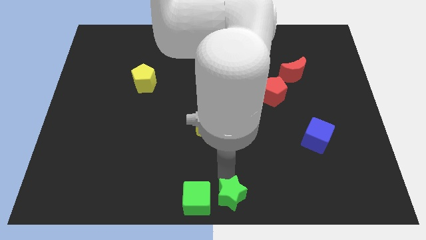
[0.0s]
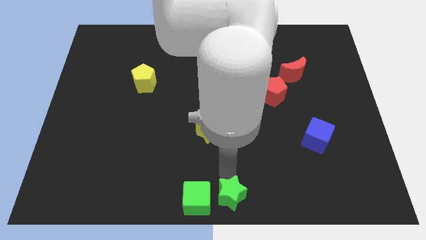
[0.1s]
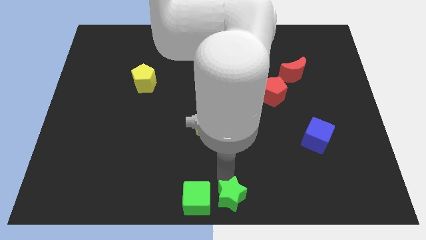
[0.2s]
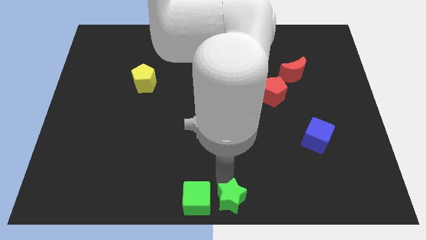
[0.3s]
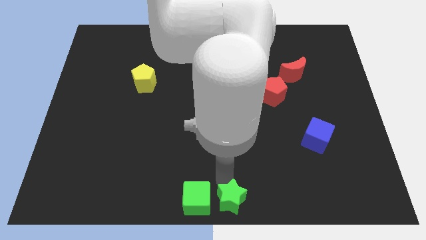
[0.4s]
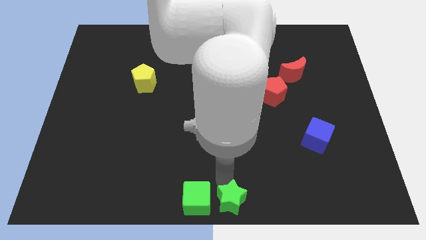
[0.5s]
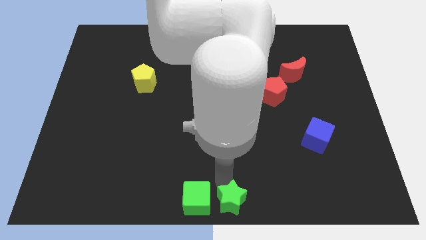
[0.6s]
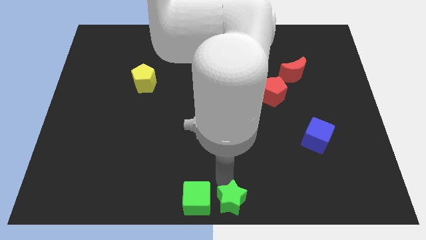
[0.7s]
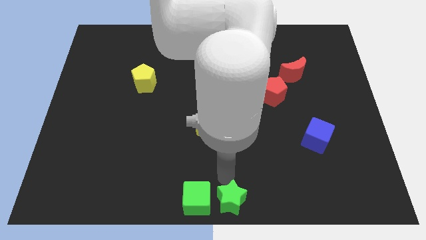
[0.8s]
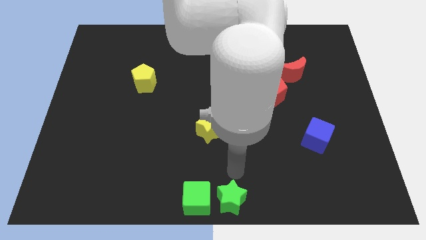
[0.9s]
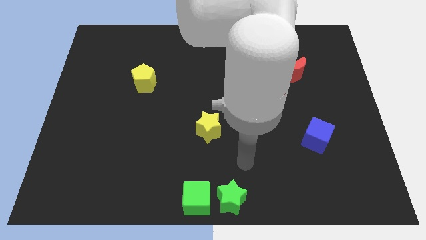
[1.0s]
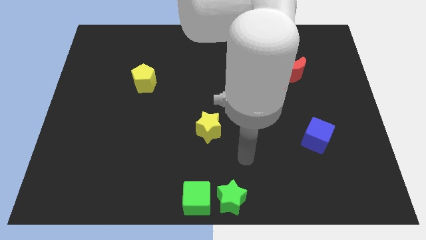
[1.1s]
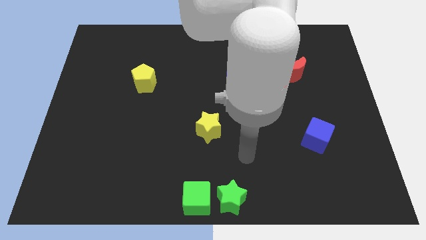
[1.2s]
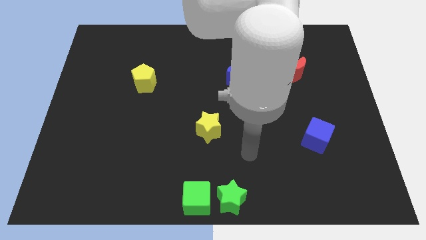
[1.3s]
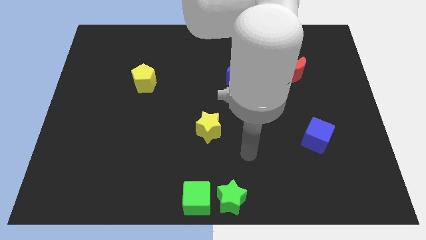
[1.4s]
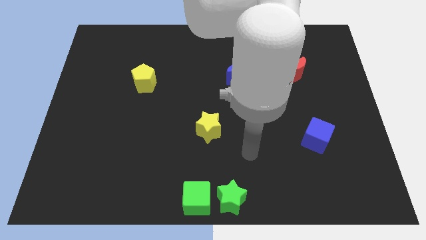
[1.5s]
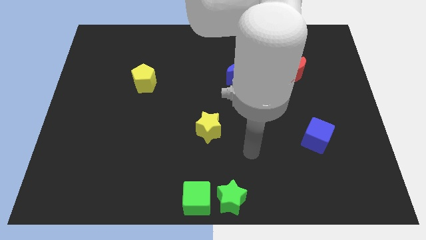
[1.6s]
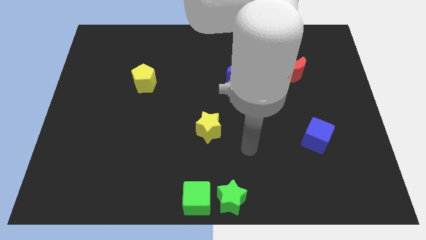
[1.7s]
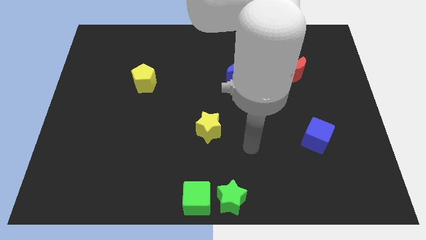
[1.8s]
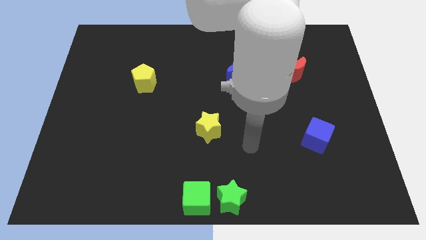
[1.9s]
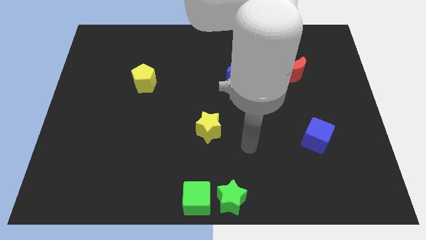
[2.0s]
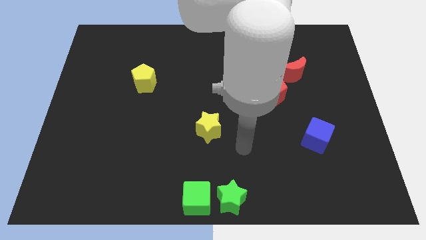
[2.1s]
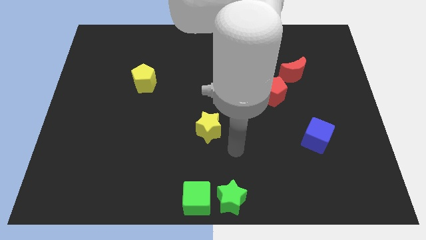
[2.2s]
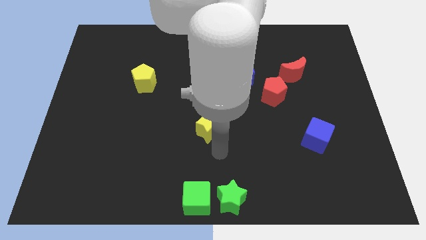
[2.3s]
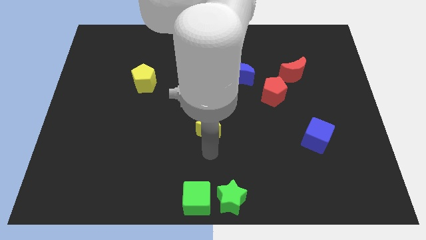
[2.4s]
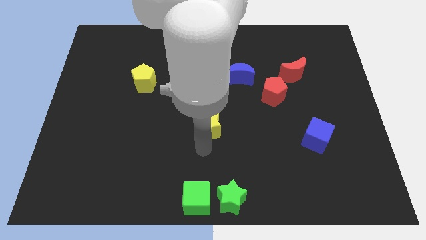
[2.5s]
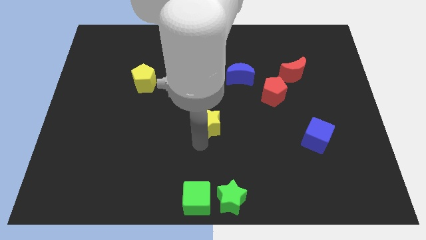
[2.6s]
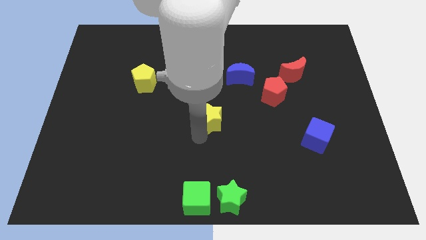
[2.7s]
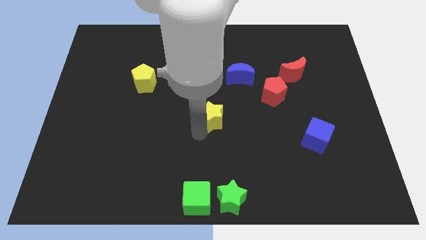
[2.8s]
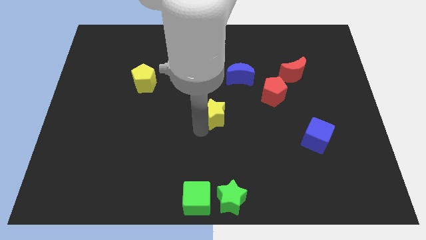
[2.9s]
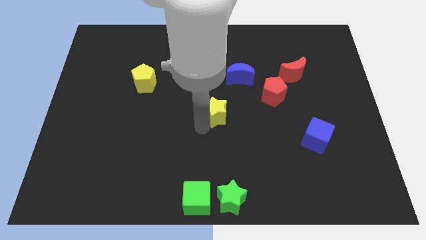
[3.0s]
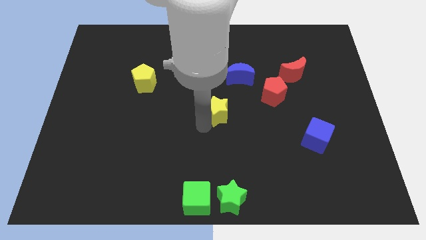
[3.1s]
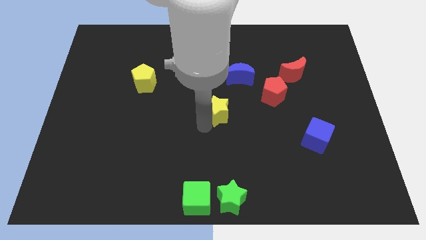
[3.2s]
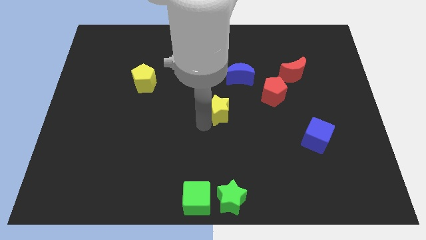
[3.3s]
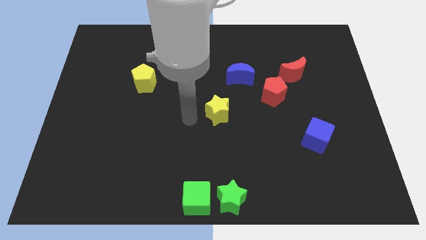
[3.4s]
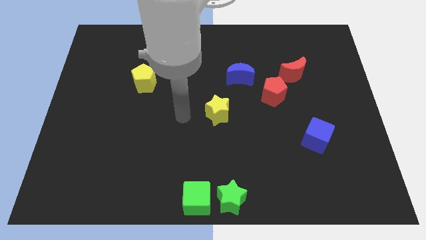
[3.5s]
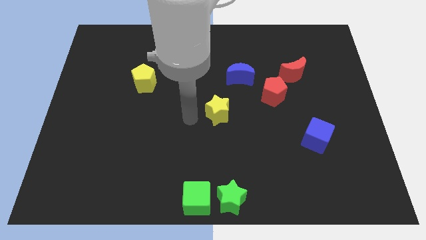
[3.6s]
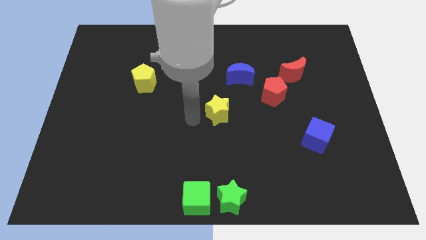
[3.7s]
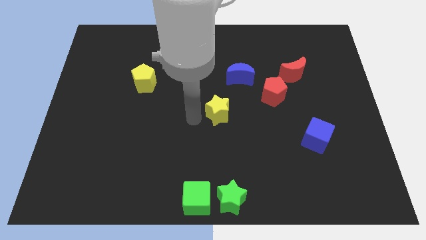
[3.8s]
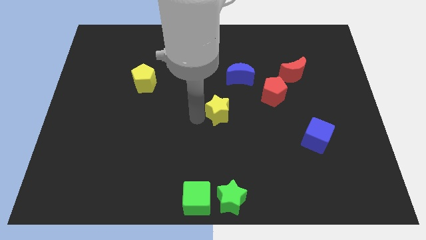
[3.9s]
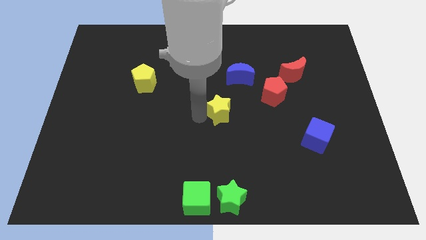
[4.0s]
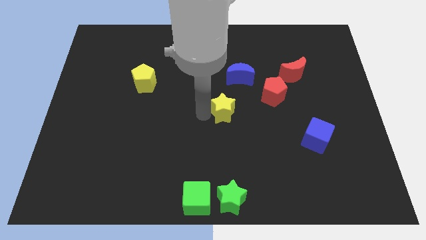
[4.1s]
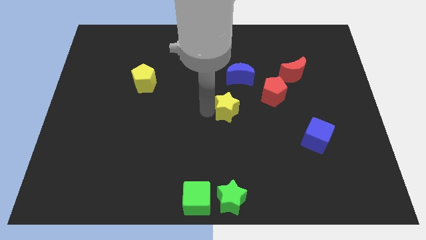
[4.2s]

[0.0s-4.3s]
move yellow star slightly to the center

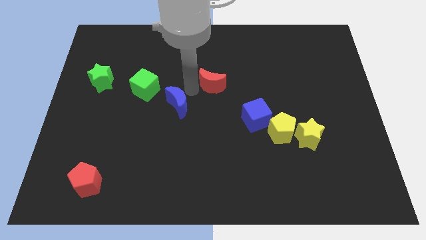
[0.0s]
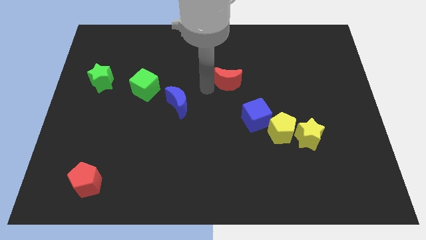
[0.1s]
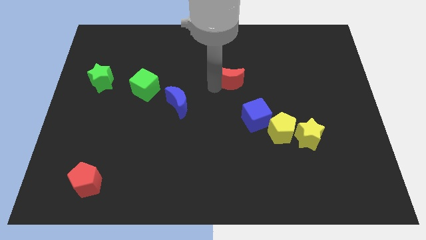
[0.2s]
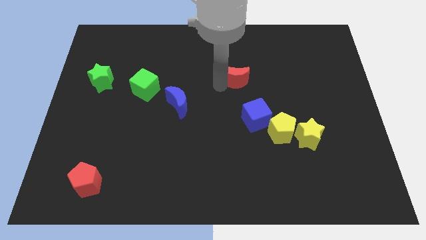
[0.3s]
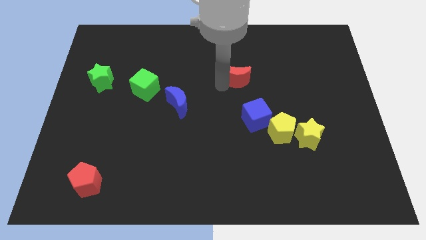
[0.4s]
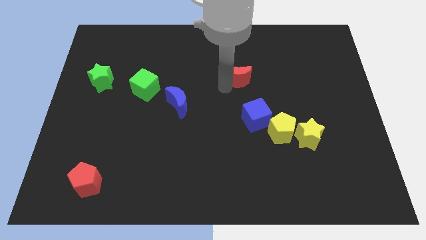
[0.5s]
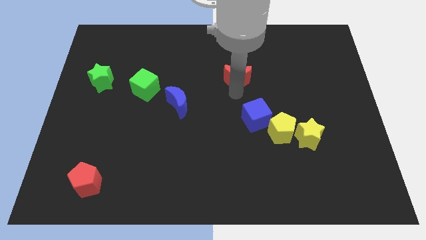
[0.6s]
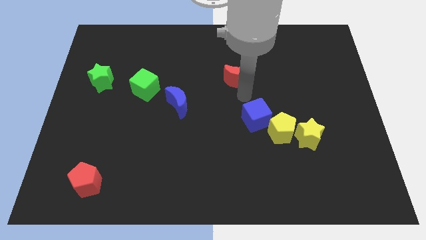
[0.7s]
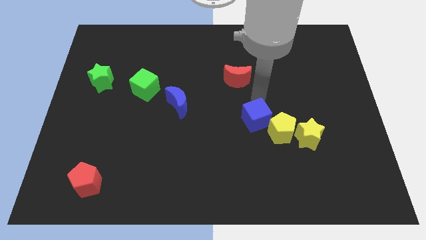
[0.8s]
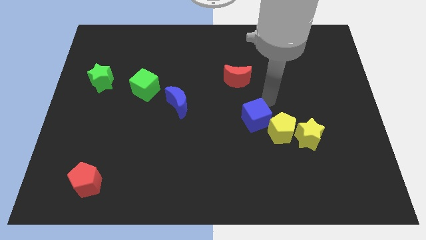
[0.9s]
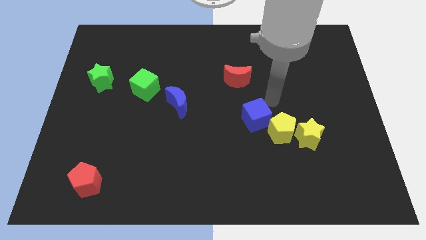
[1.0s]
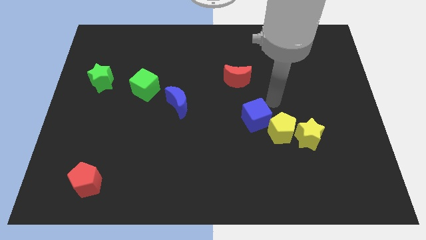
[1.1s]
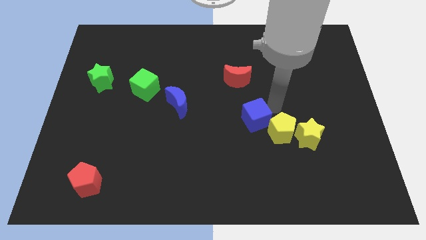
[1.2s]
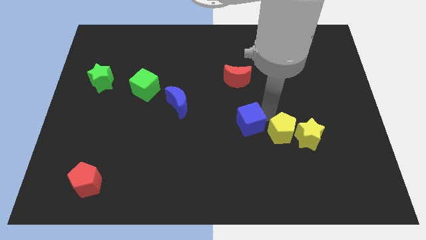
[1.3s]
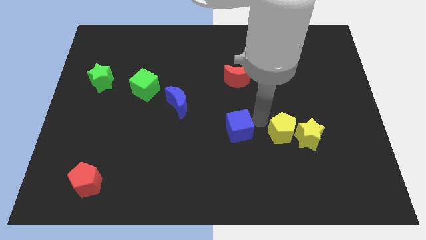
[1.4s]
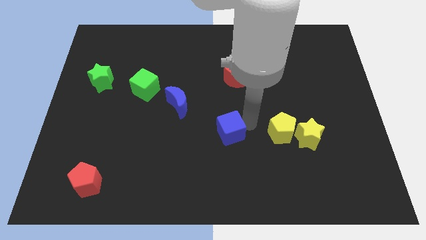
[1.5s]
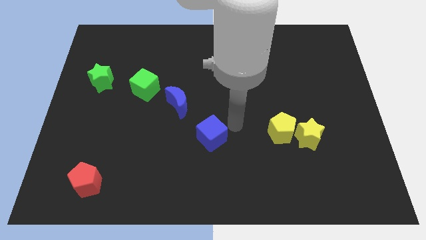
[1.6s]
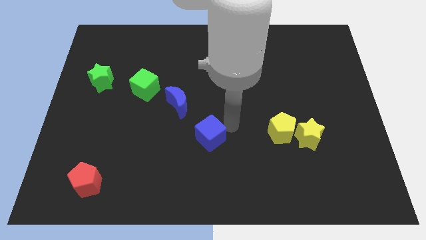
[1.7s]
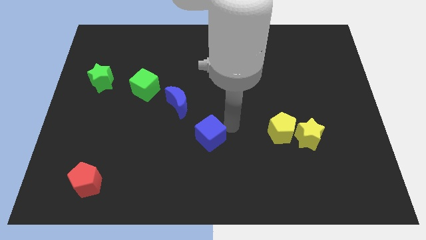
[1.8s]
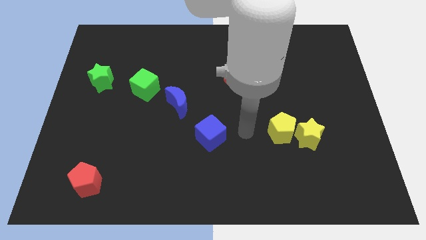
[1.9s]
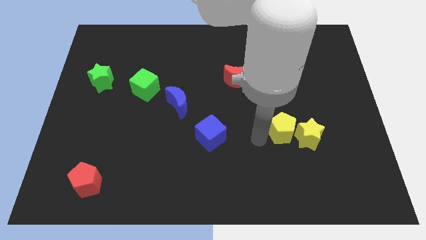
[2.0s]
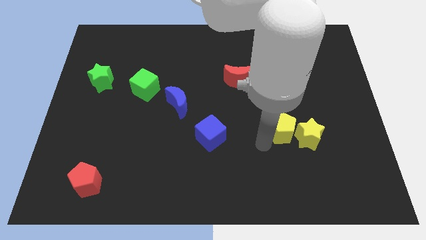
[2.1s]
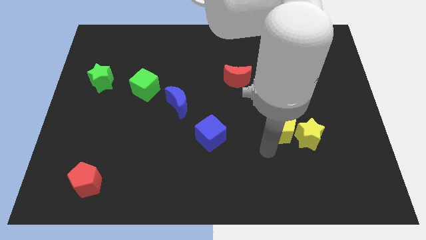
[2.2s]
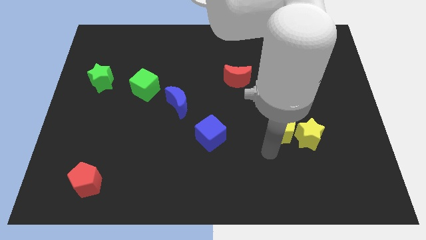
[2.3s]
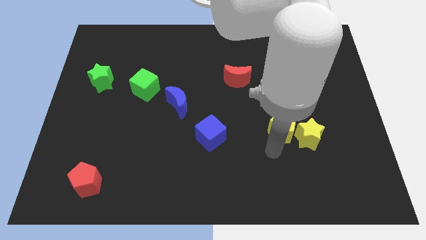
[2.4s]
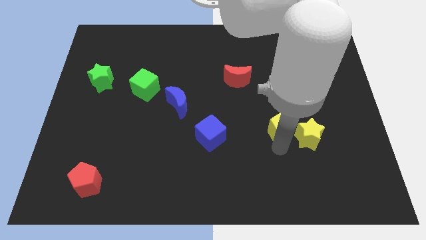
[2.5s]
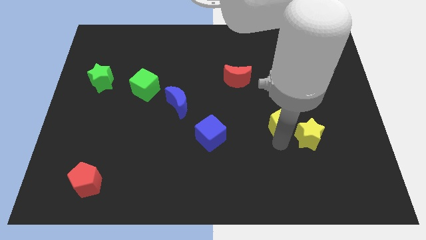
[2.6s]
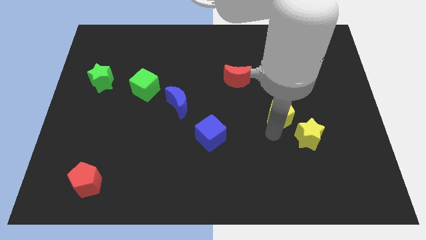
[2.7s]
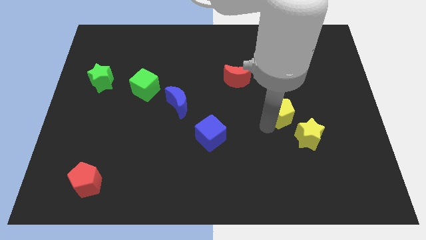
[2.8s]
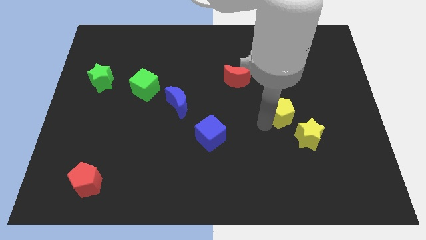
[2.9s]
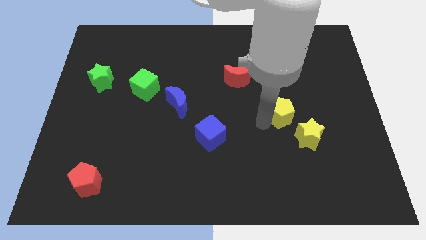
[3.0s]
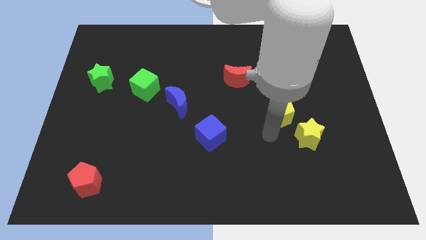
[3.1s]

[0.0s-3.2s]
push the yellow pentagon slightly towards up

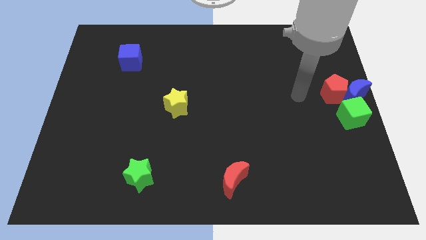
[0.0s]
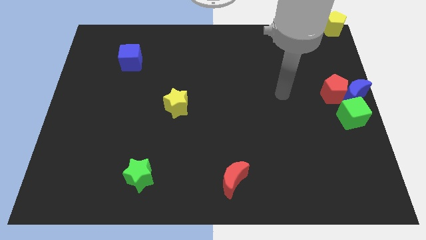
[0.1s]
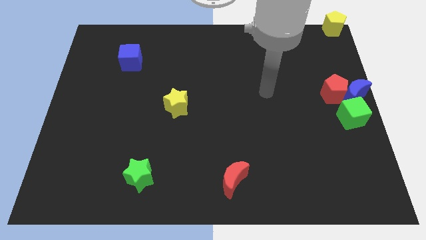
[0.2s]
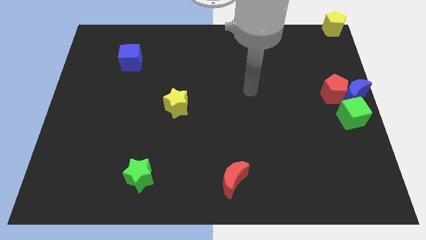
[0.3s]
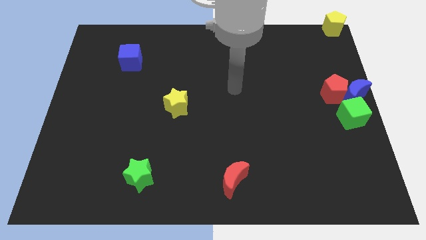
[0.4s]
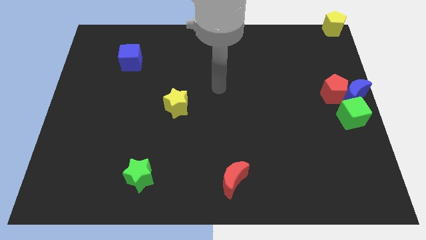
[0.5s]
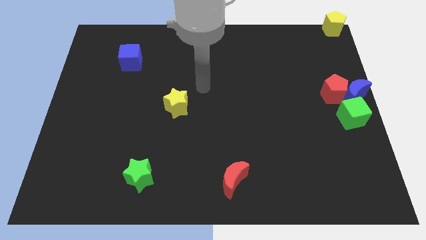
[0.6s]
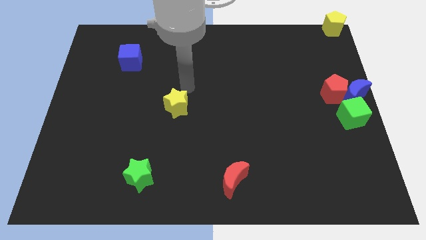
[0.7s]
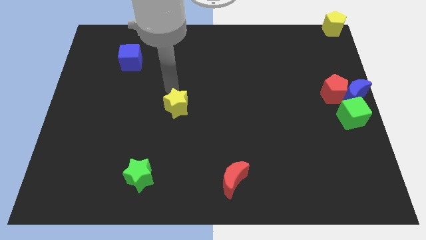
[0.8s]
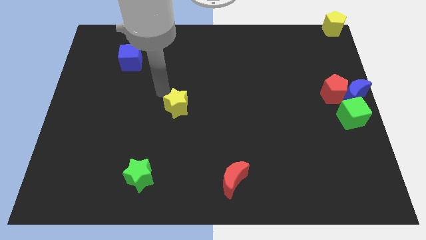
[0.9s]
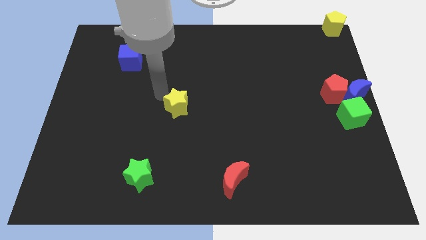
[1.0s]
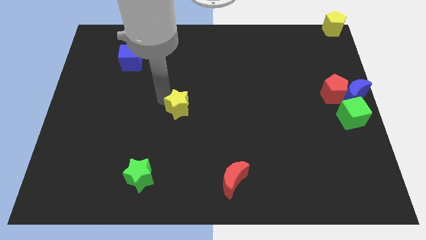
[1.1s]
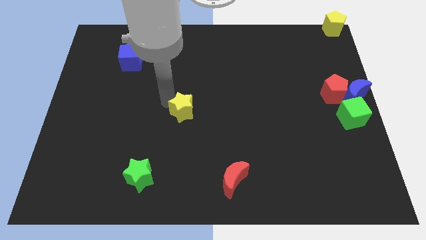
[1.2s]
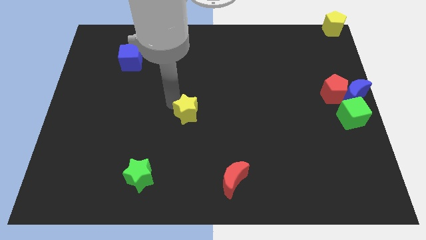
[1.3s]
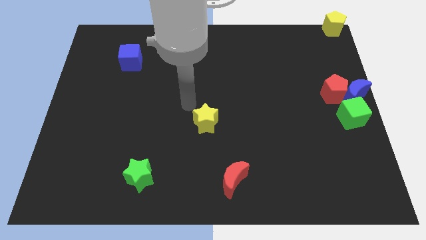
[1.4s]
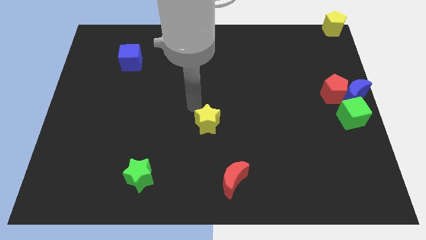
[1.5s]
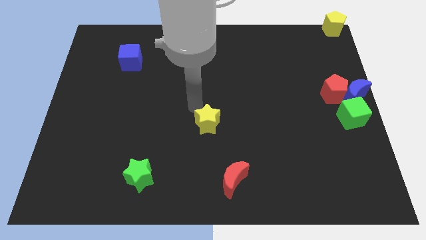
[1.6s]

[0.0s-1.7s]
move the yellow star slightly to the bottom
